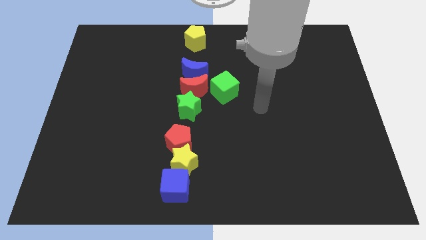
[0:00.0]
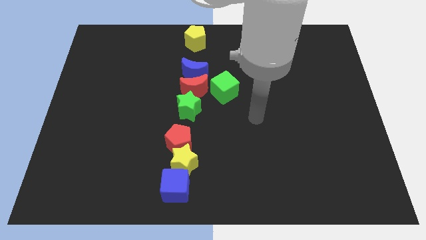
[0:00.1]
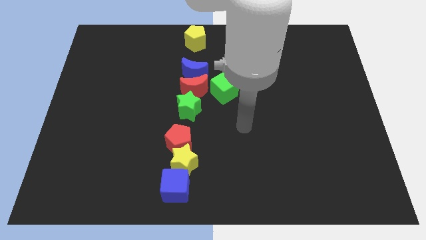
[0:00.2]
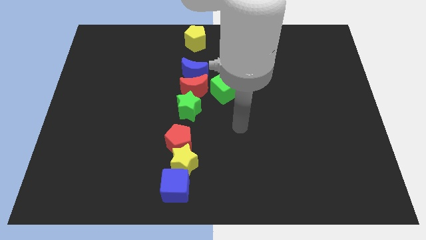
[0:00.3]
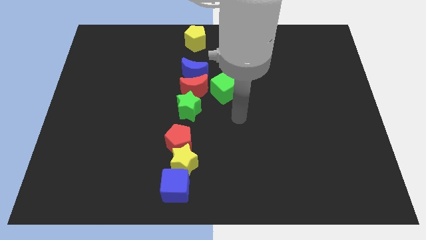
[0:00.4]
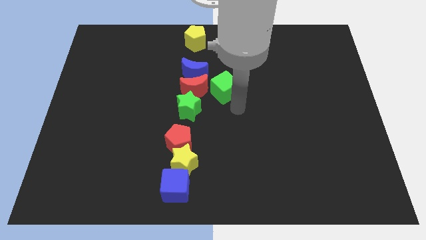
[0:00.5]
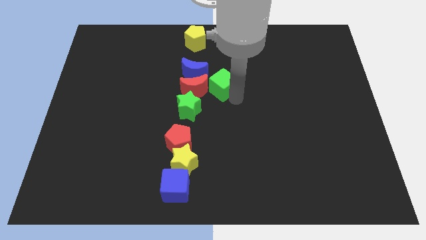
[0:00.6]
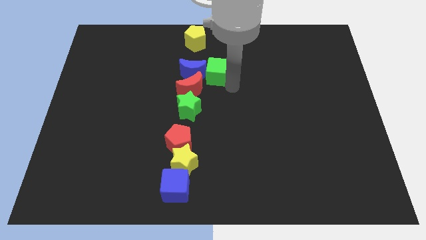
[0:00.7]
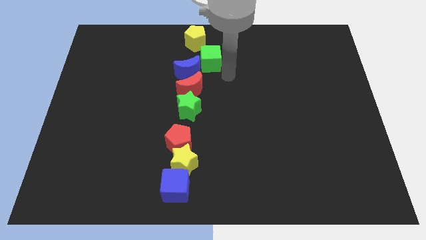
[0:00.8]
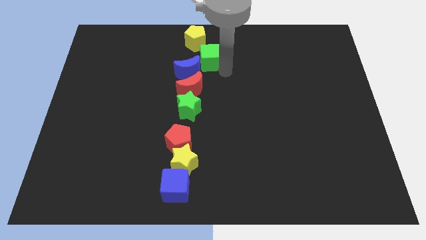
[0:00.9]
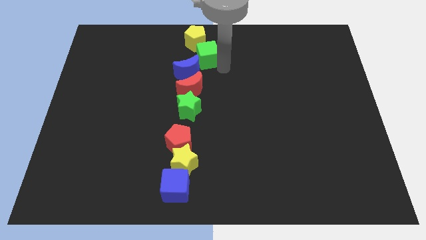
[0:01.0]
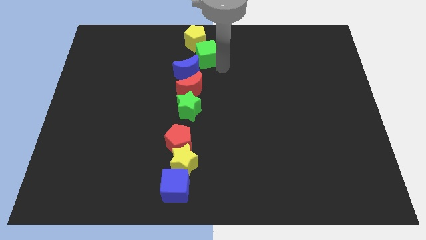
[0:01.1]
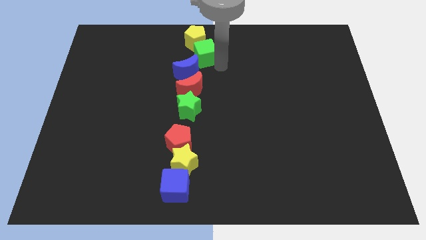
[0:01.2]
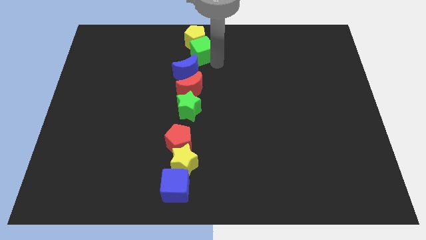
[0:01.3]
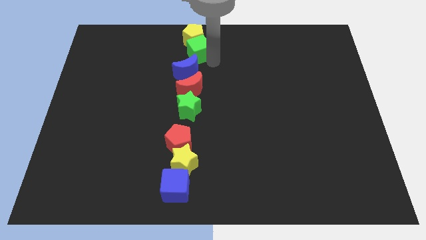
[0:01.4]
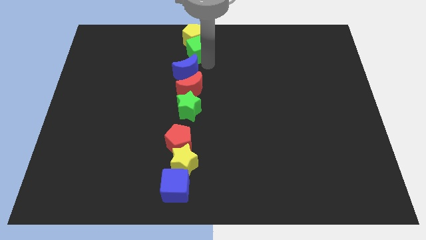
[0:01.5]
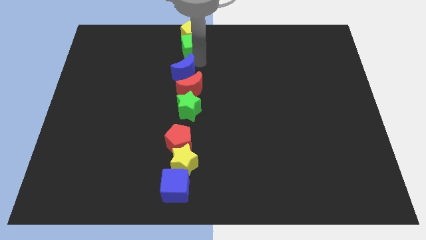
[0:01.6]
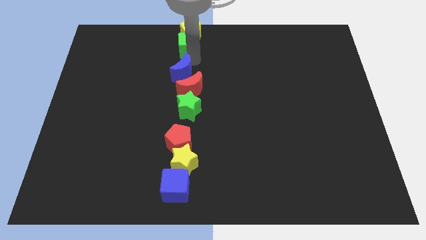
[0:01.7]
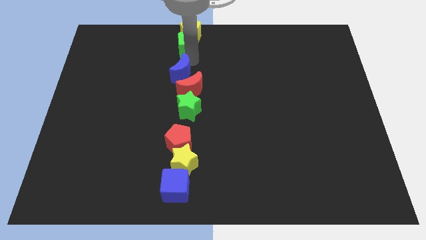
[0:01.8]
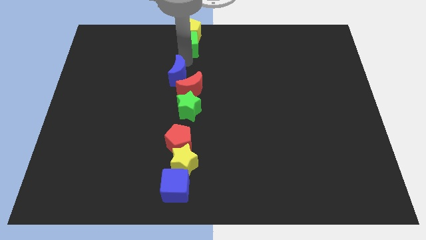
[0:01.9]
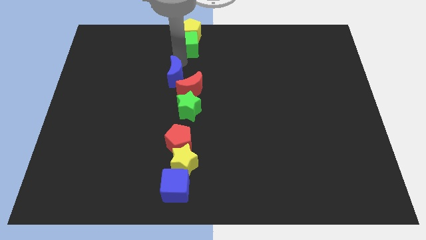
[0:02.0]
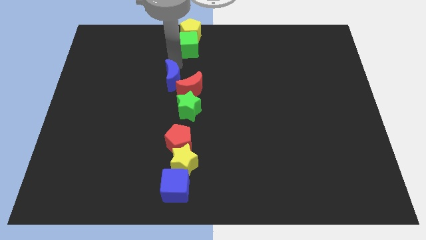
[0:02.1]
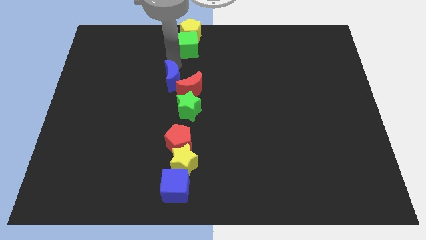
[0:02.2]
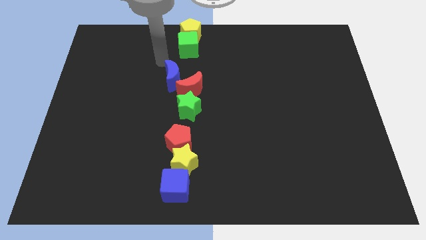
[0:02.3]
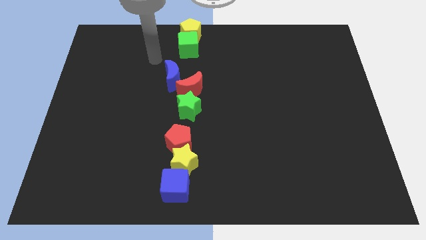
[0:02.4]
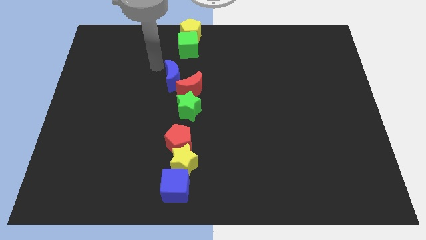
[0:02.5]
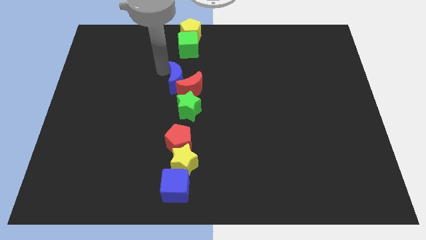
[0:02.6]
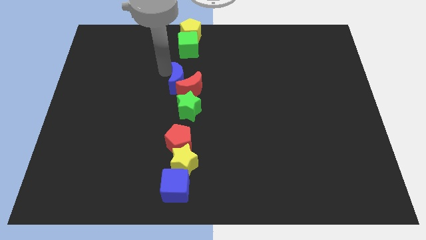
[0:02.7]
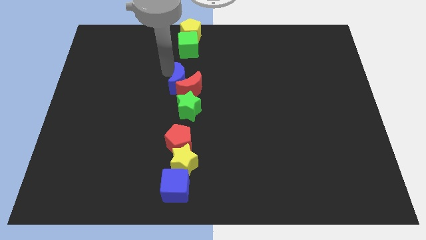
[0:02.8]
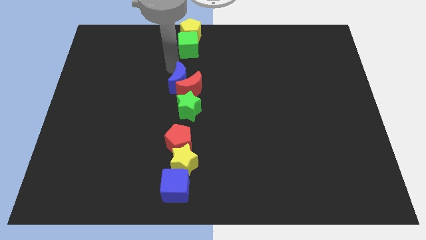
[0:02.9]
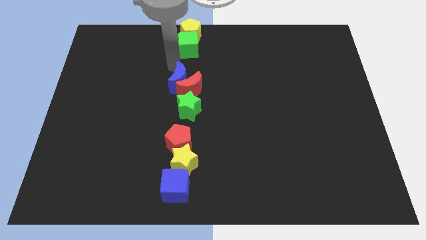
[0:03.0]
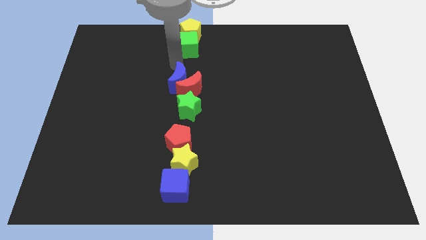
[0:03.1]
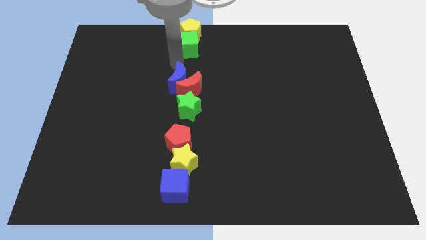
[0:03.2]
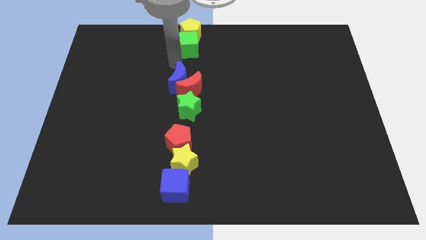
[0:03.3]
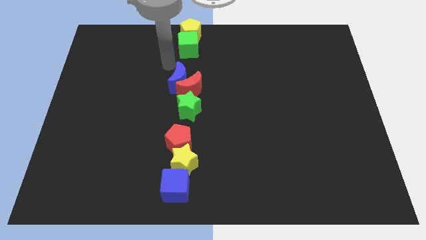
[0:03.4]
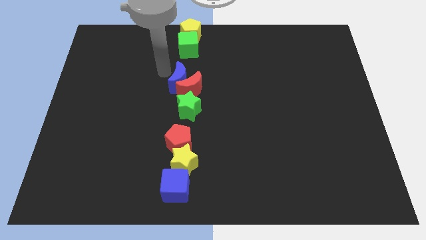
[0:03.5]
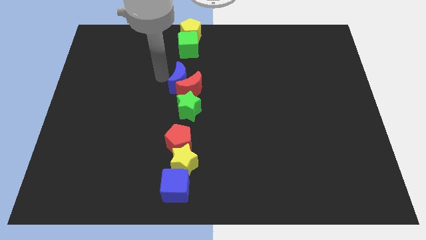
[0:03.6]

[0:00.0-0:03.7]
push green cube into the yellow pentagon to the top center

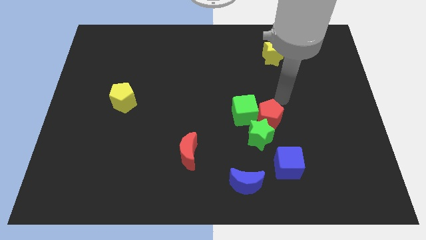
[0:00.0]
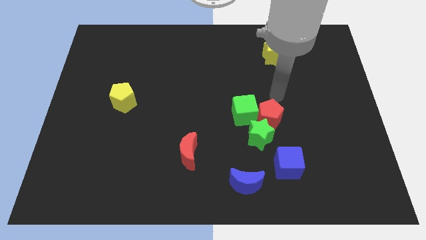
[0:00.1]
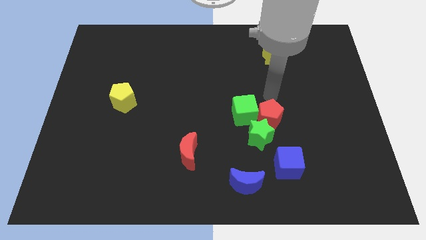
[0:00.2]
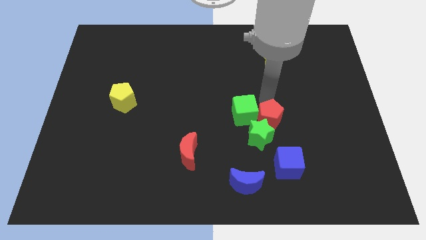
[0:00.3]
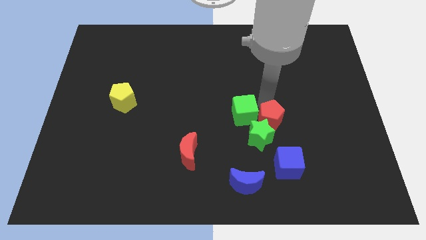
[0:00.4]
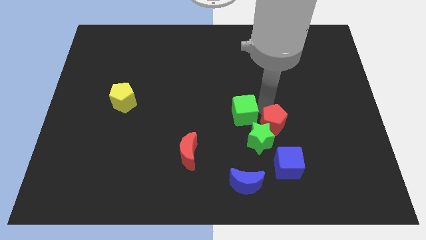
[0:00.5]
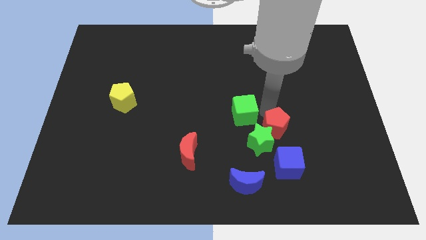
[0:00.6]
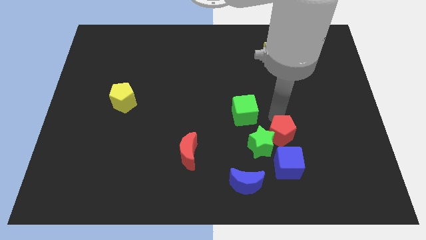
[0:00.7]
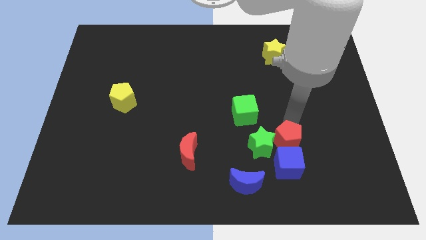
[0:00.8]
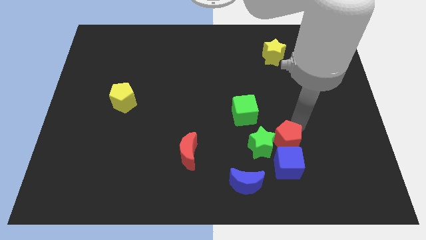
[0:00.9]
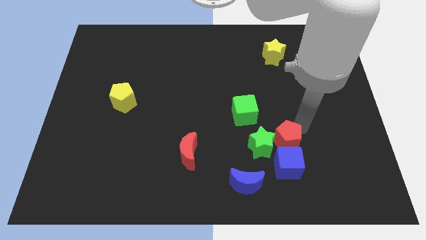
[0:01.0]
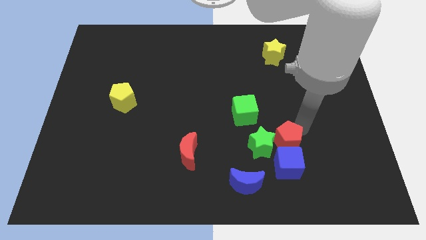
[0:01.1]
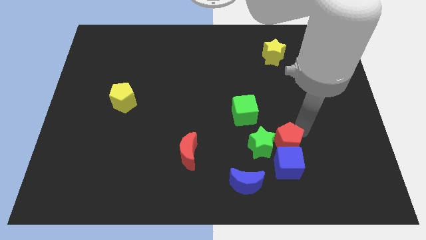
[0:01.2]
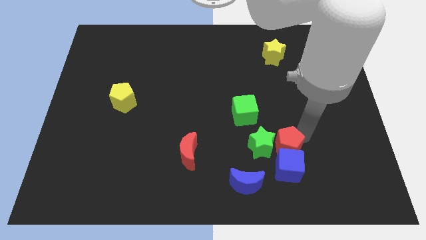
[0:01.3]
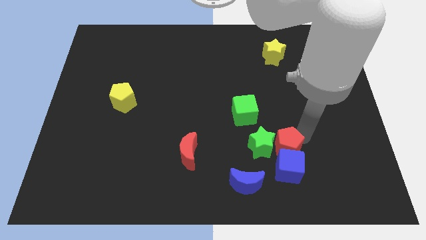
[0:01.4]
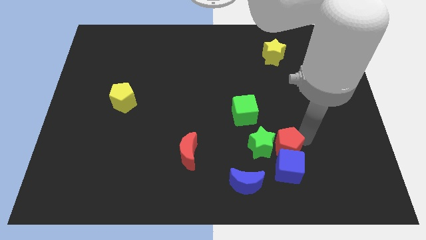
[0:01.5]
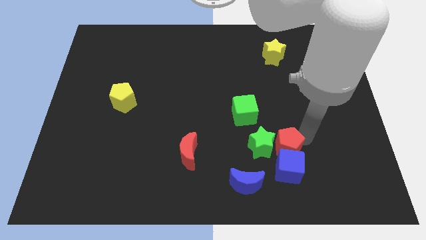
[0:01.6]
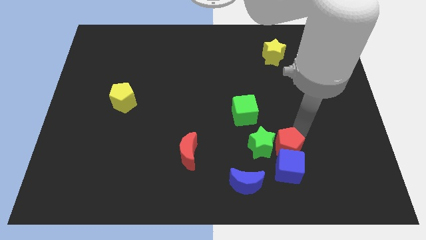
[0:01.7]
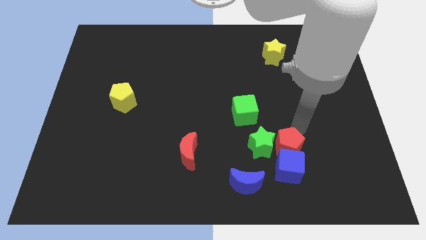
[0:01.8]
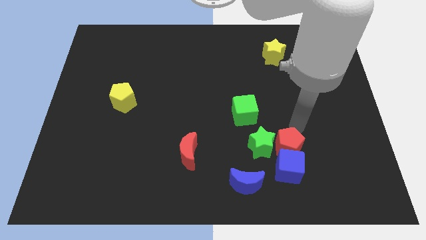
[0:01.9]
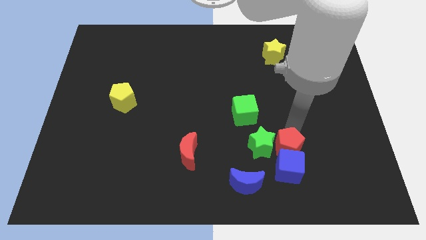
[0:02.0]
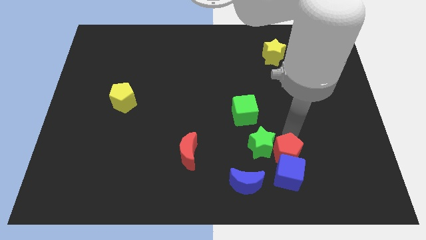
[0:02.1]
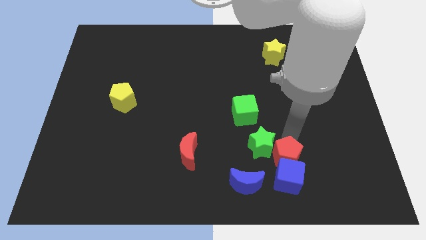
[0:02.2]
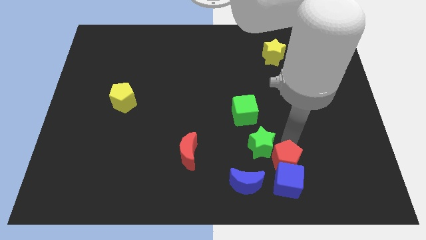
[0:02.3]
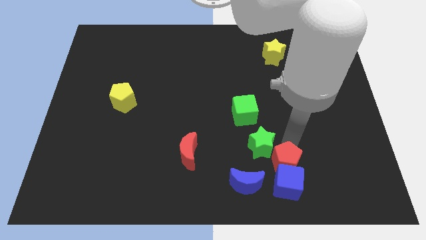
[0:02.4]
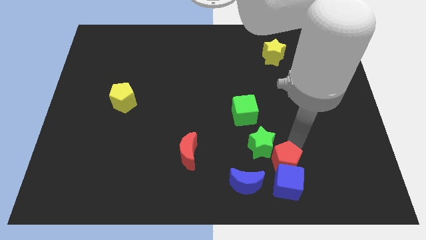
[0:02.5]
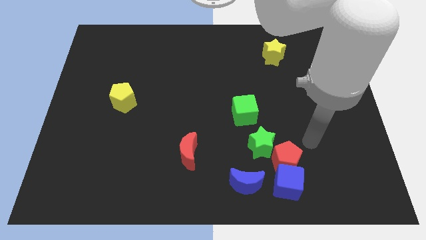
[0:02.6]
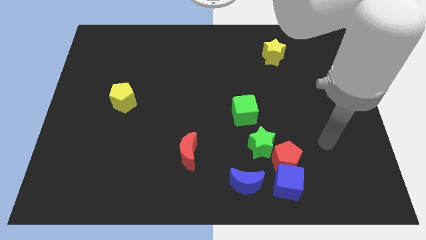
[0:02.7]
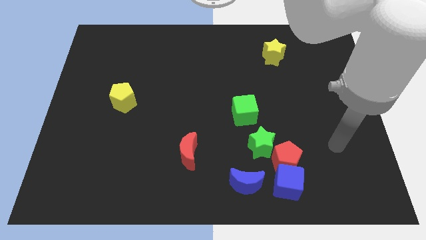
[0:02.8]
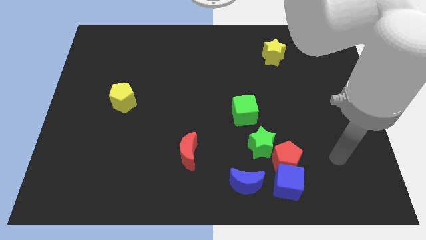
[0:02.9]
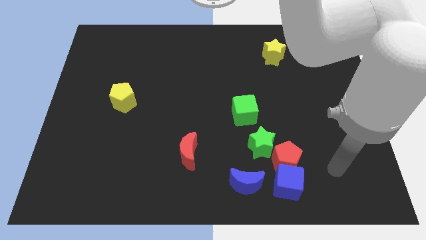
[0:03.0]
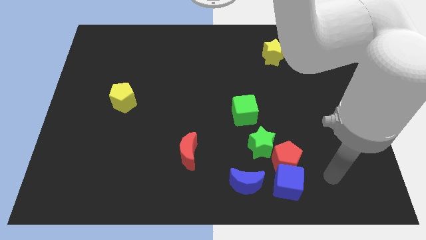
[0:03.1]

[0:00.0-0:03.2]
push the red pentagon along with the blue cube towards the bottom side of the board

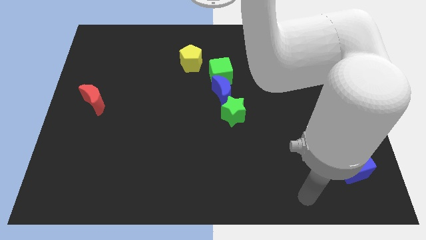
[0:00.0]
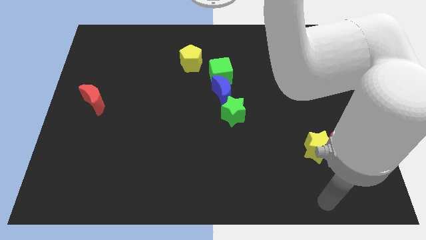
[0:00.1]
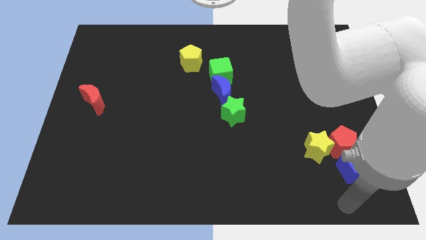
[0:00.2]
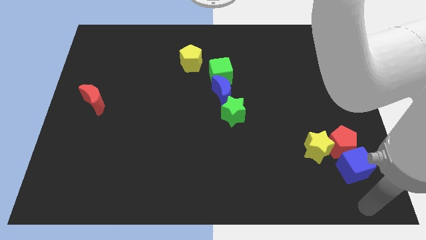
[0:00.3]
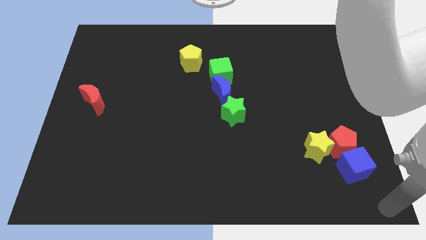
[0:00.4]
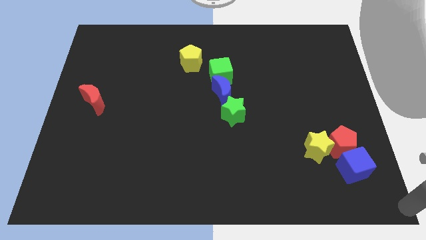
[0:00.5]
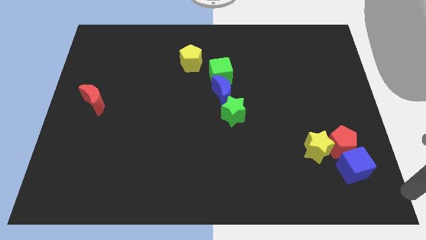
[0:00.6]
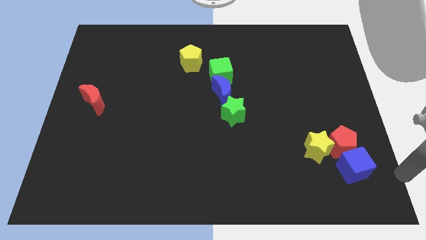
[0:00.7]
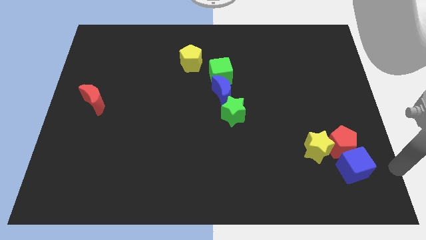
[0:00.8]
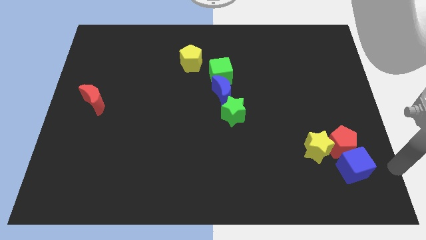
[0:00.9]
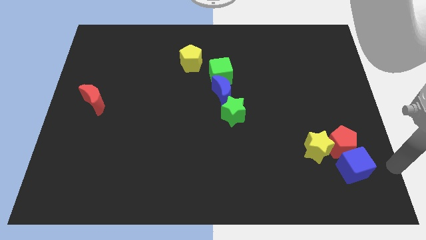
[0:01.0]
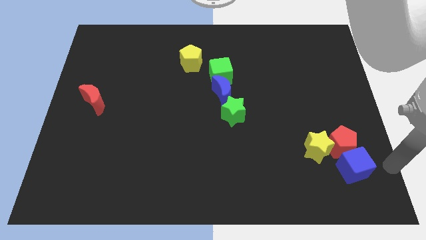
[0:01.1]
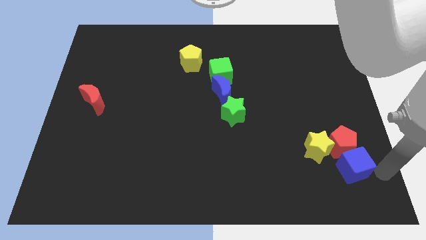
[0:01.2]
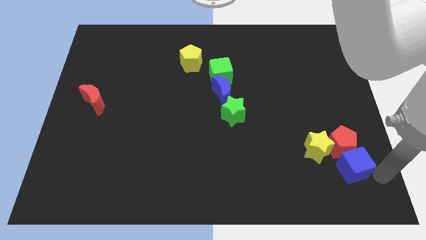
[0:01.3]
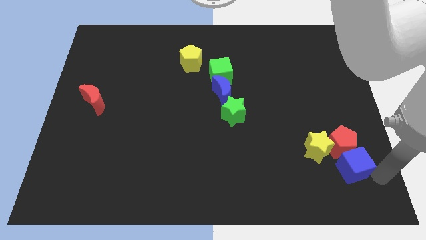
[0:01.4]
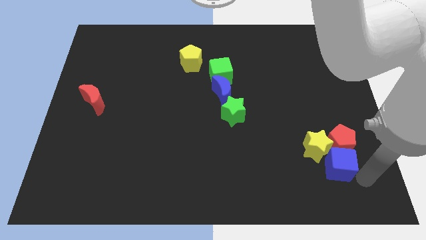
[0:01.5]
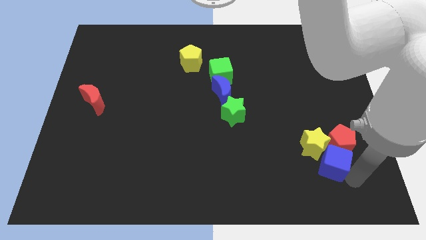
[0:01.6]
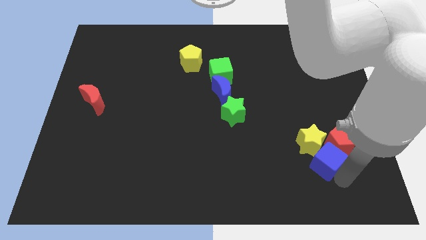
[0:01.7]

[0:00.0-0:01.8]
slightly move blue cube towards upward

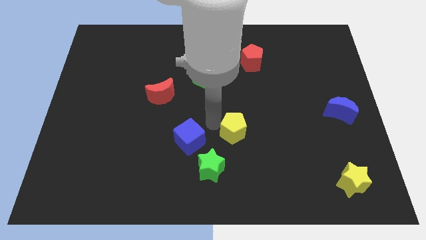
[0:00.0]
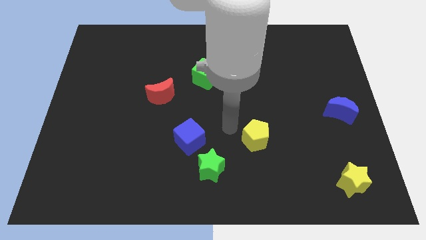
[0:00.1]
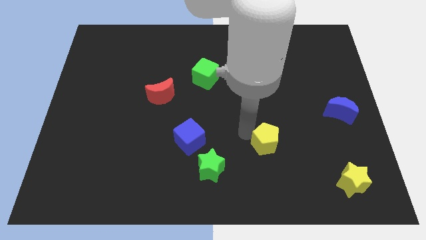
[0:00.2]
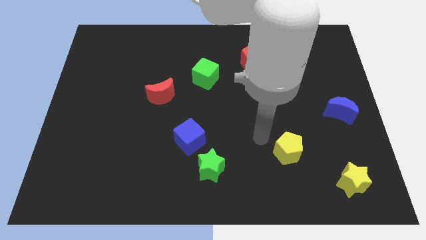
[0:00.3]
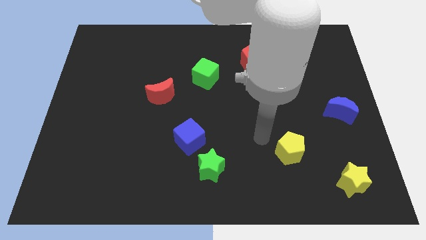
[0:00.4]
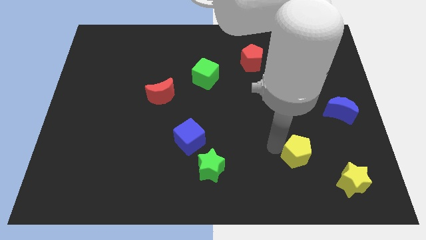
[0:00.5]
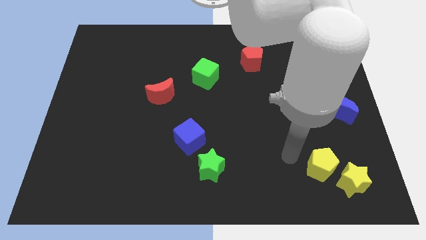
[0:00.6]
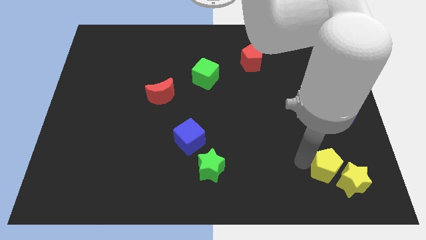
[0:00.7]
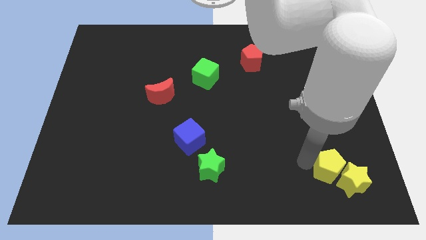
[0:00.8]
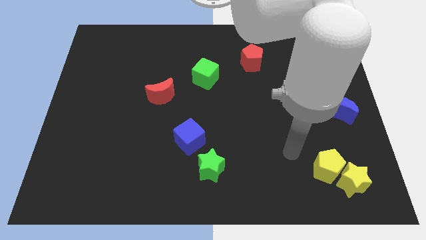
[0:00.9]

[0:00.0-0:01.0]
place the yellow pentagon into yellow star
